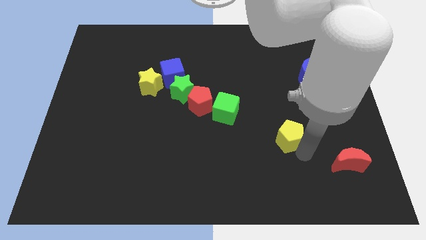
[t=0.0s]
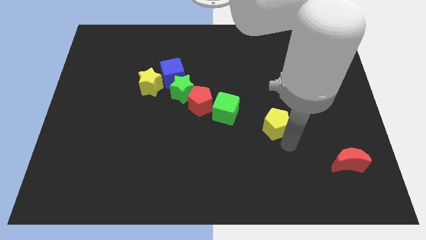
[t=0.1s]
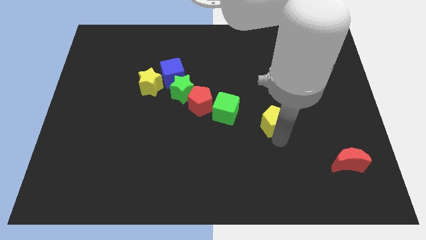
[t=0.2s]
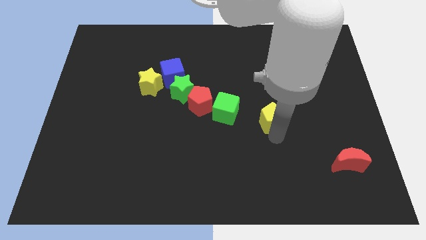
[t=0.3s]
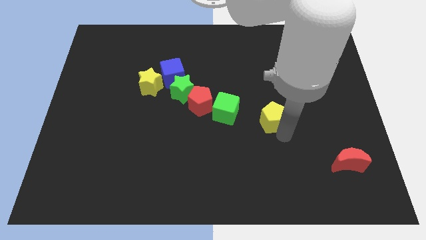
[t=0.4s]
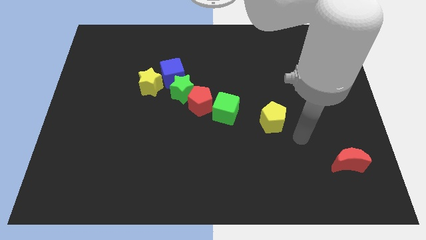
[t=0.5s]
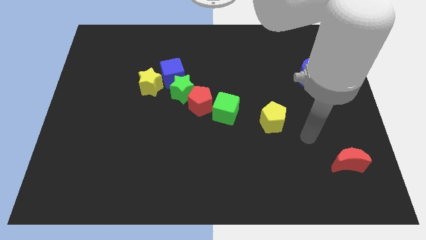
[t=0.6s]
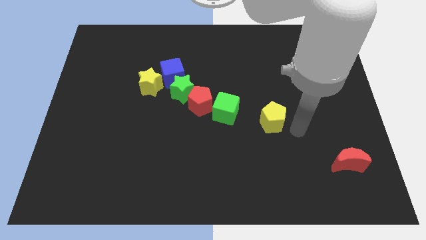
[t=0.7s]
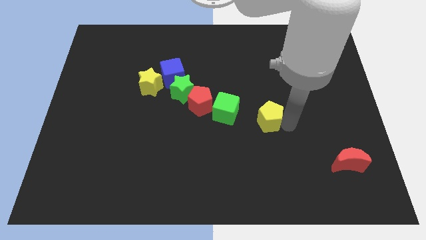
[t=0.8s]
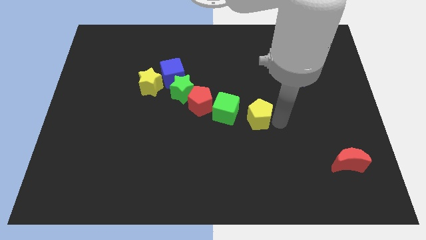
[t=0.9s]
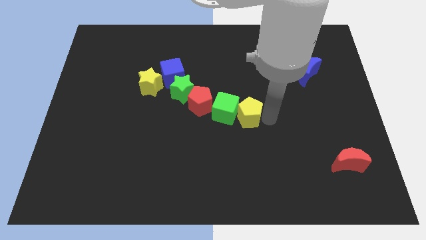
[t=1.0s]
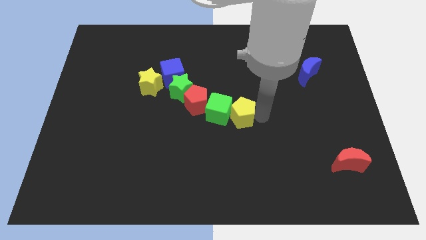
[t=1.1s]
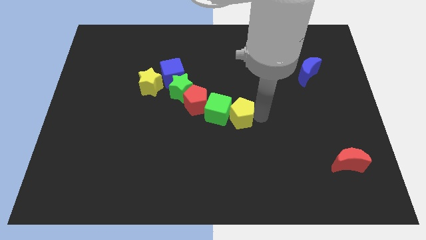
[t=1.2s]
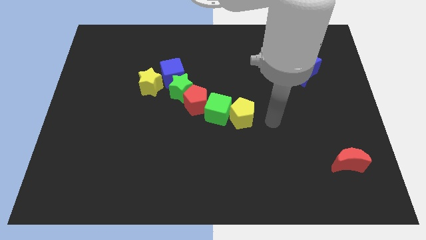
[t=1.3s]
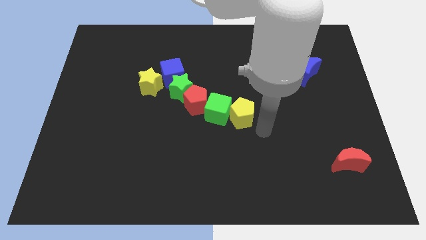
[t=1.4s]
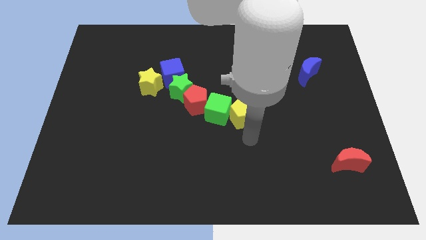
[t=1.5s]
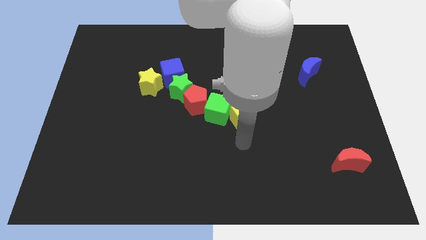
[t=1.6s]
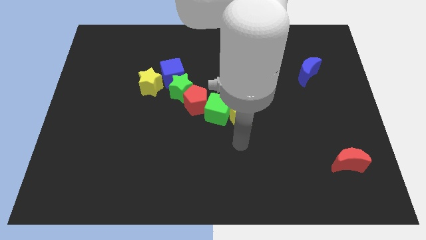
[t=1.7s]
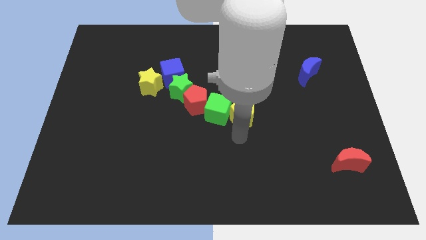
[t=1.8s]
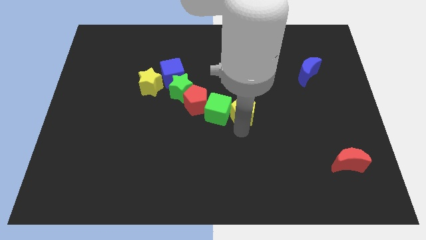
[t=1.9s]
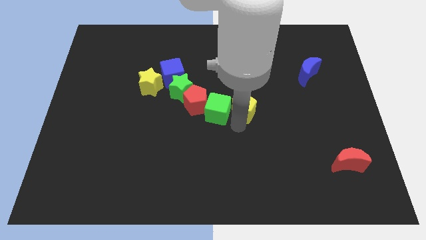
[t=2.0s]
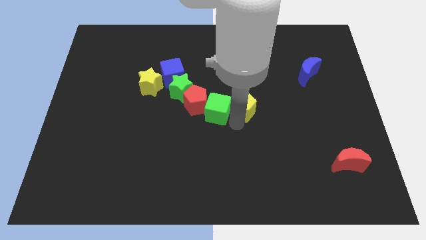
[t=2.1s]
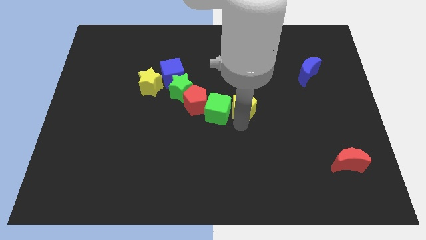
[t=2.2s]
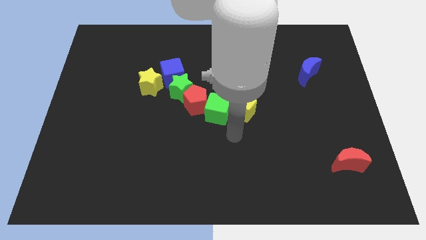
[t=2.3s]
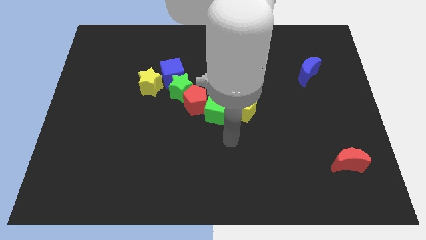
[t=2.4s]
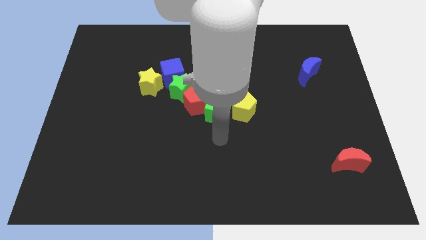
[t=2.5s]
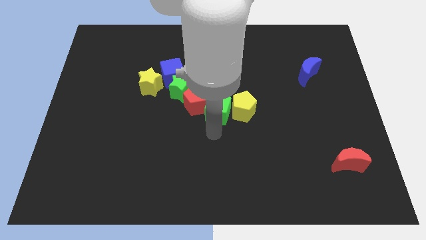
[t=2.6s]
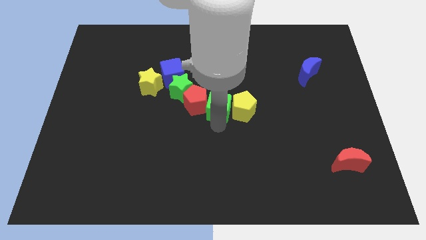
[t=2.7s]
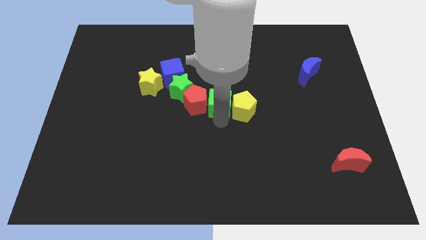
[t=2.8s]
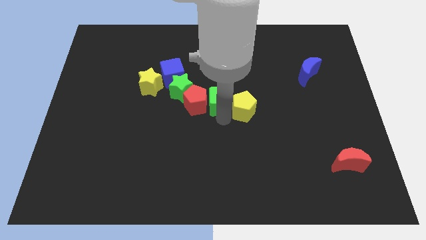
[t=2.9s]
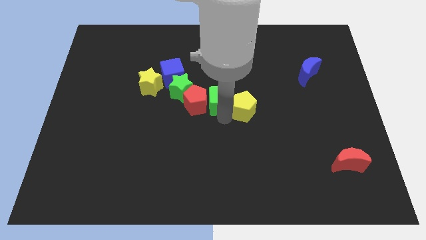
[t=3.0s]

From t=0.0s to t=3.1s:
push the yellow pentagon into the green cube

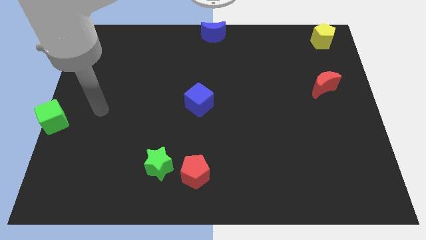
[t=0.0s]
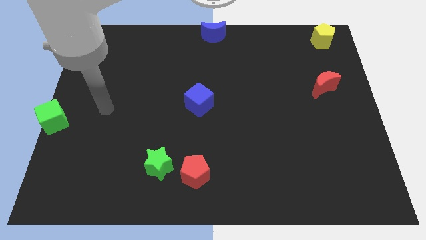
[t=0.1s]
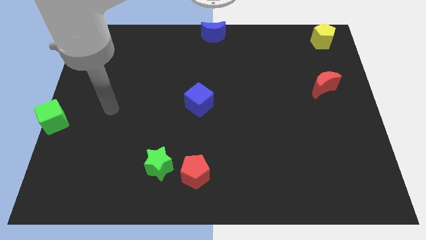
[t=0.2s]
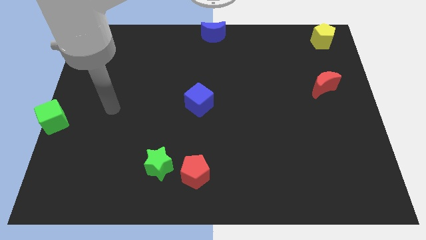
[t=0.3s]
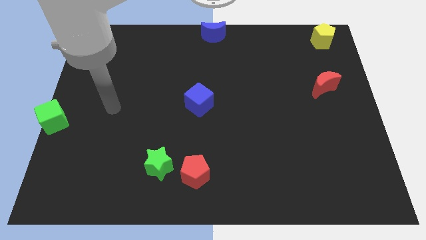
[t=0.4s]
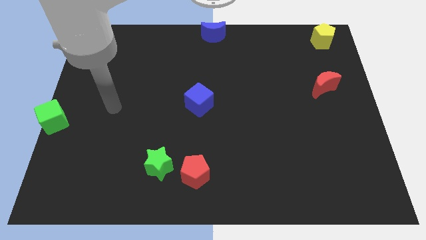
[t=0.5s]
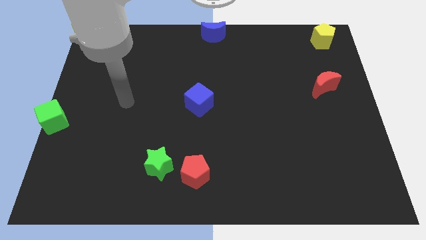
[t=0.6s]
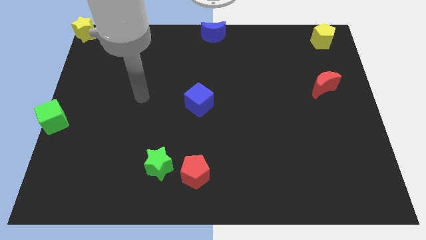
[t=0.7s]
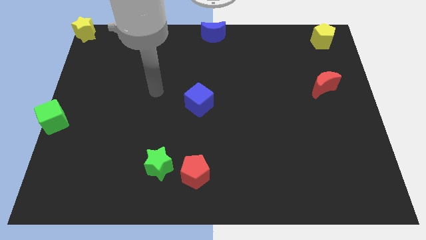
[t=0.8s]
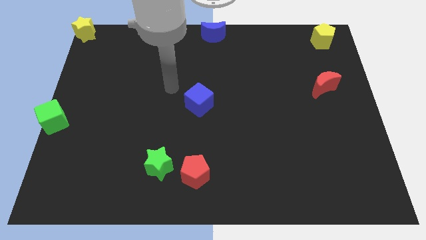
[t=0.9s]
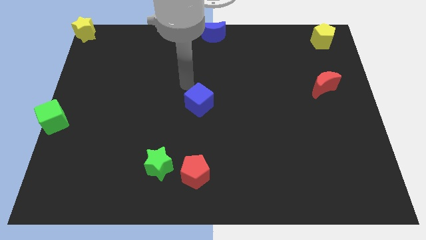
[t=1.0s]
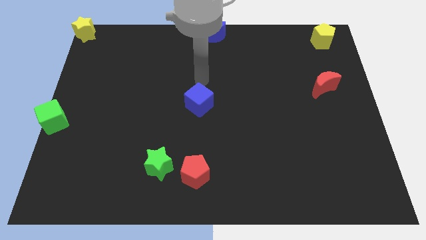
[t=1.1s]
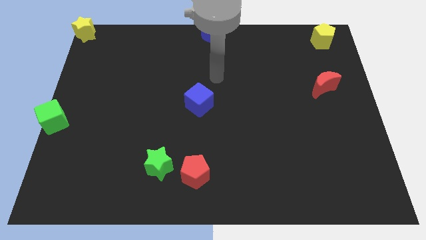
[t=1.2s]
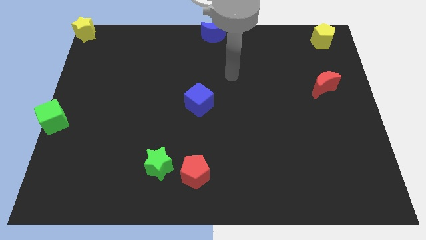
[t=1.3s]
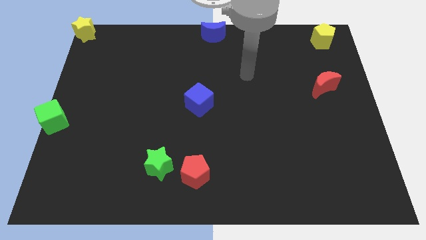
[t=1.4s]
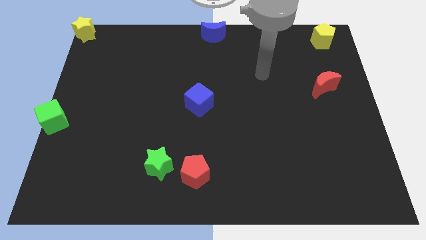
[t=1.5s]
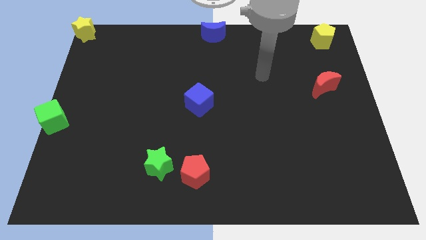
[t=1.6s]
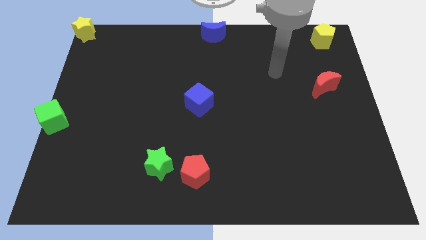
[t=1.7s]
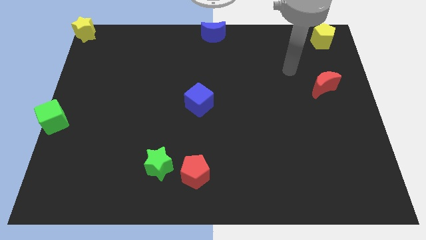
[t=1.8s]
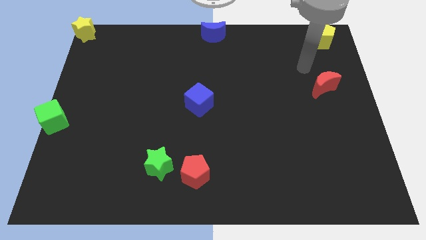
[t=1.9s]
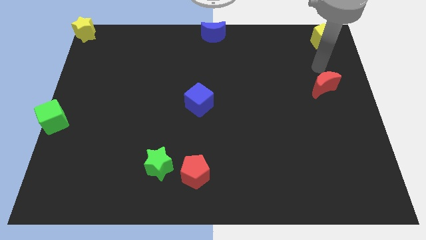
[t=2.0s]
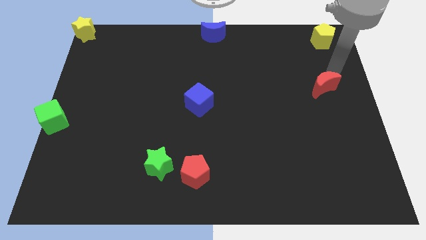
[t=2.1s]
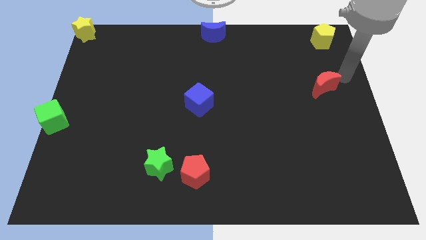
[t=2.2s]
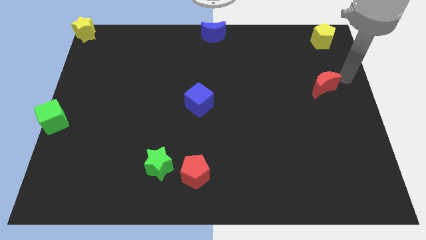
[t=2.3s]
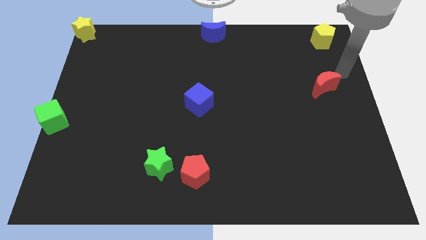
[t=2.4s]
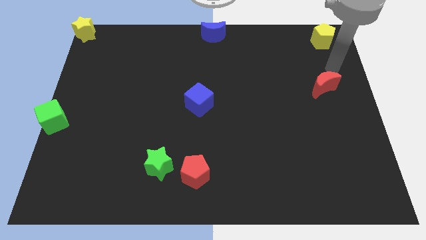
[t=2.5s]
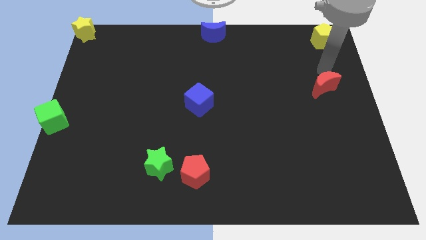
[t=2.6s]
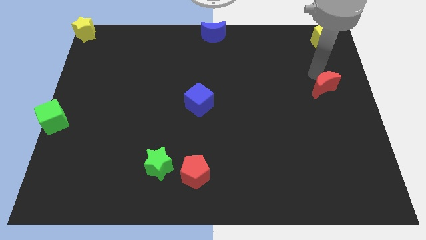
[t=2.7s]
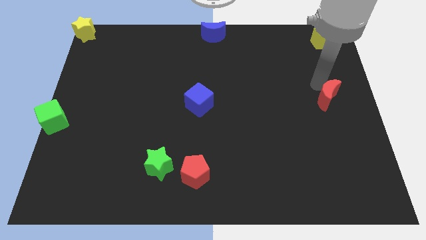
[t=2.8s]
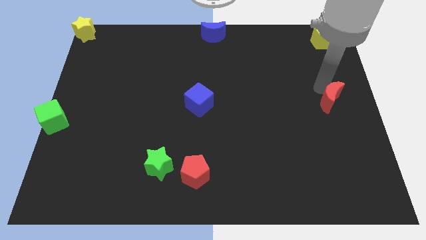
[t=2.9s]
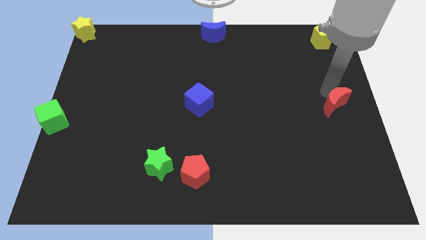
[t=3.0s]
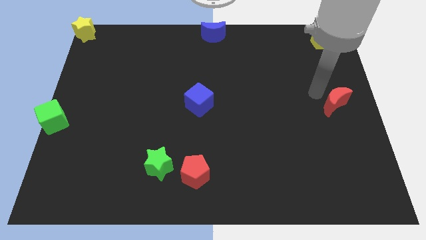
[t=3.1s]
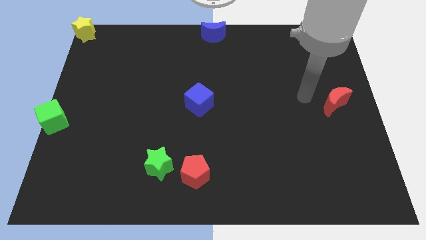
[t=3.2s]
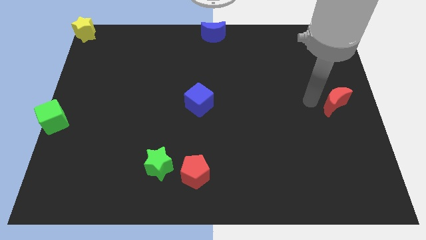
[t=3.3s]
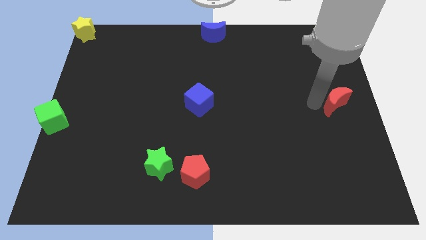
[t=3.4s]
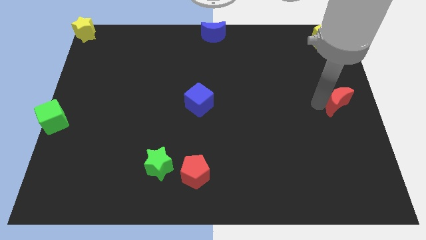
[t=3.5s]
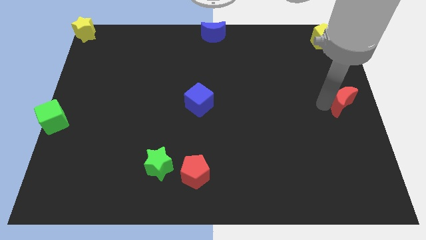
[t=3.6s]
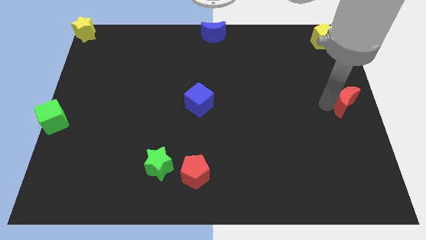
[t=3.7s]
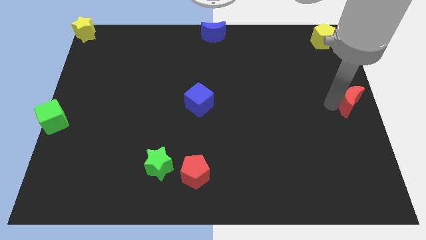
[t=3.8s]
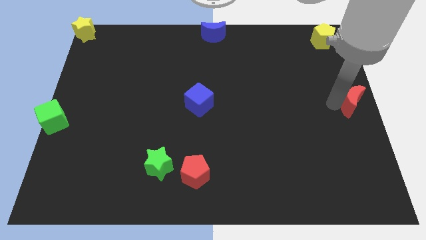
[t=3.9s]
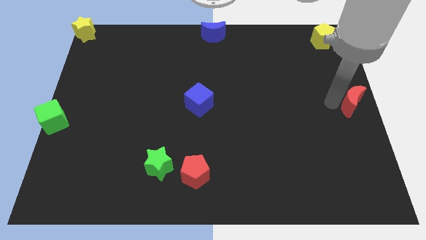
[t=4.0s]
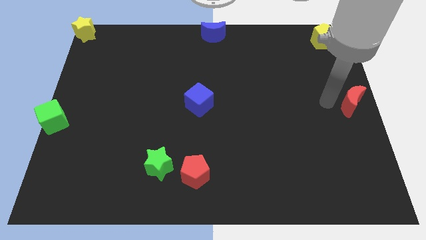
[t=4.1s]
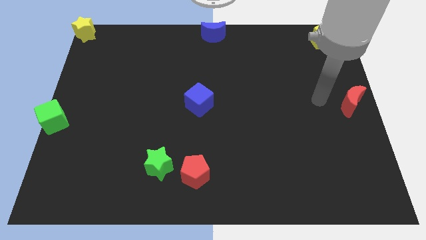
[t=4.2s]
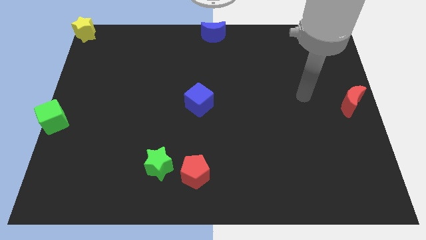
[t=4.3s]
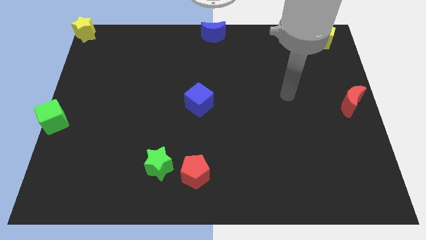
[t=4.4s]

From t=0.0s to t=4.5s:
push red moon to the center right

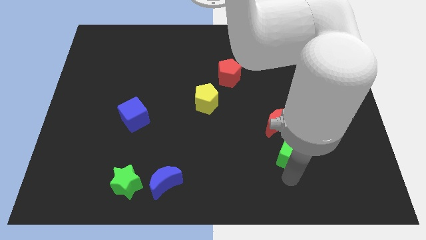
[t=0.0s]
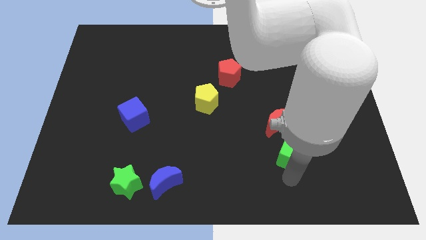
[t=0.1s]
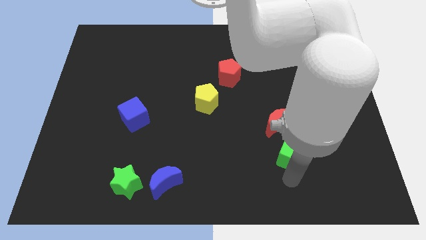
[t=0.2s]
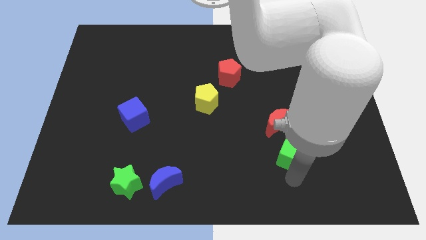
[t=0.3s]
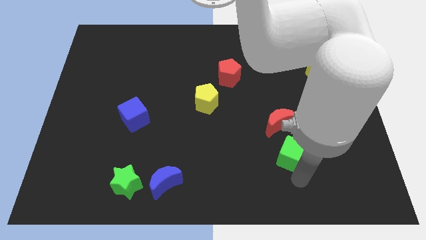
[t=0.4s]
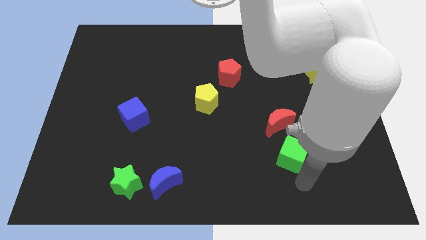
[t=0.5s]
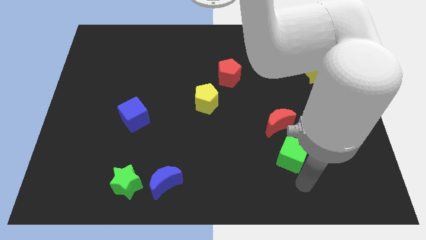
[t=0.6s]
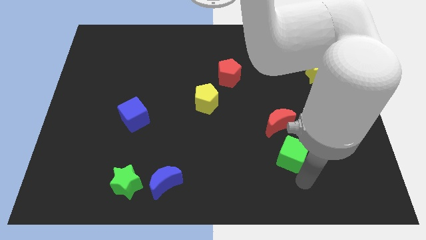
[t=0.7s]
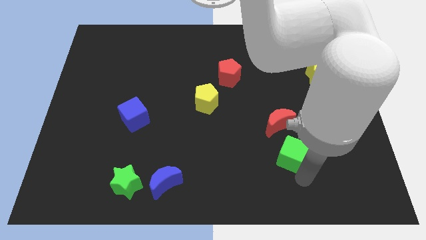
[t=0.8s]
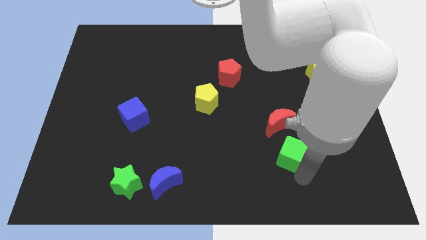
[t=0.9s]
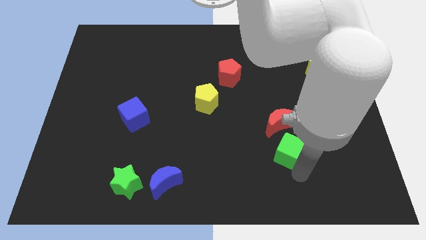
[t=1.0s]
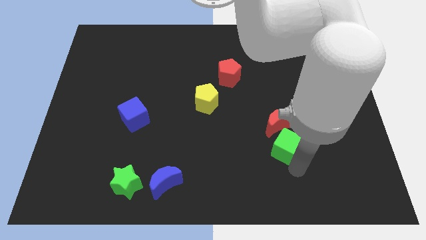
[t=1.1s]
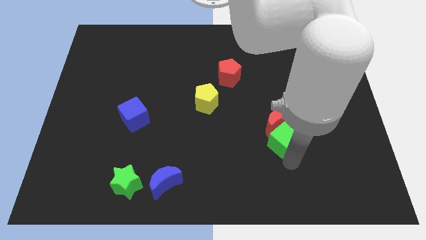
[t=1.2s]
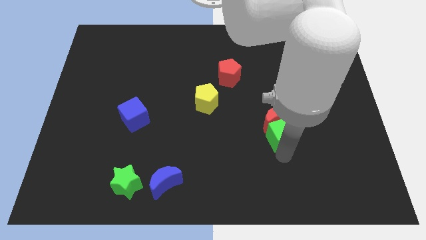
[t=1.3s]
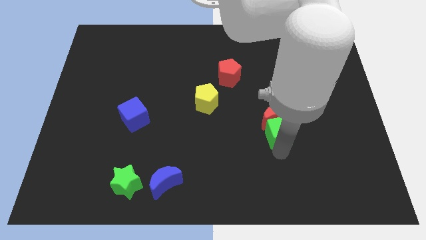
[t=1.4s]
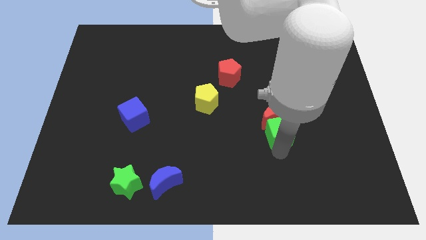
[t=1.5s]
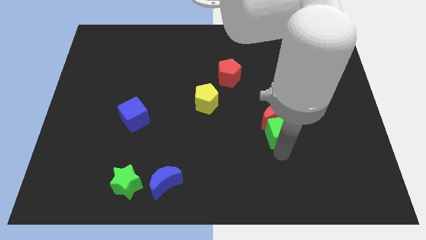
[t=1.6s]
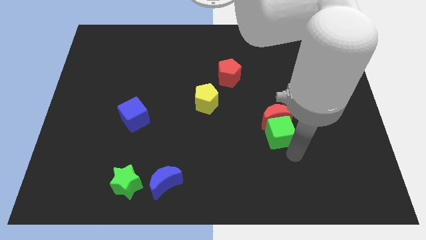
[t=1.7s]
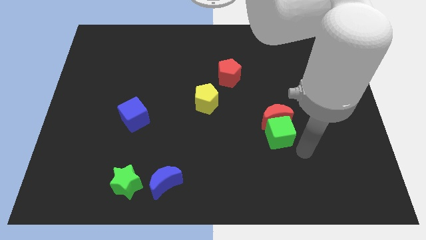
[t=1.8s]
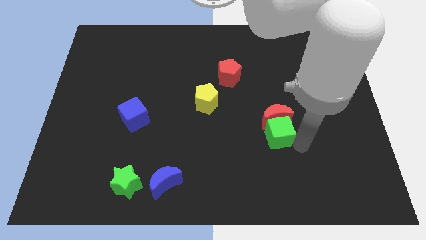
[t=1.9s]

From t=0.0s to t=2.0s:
push the green cube into the red crescent
